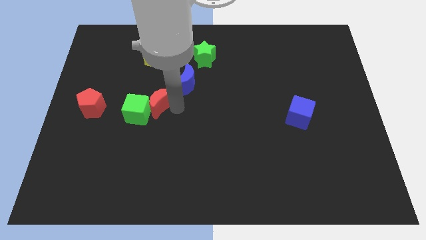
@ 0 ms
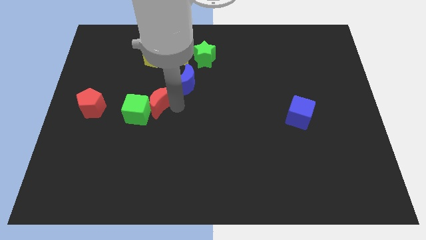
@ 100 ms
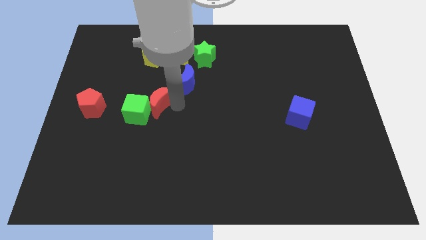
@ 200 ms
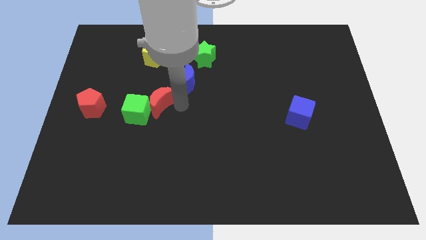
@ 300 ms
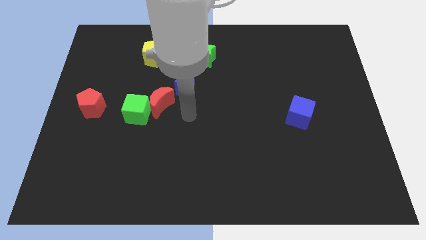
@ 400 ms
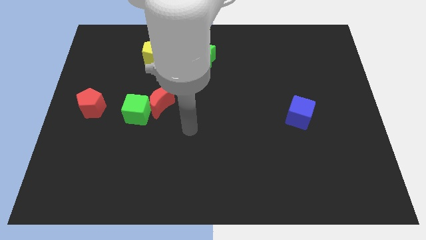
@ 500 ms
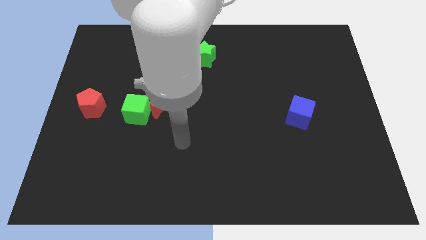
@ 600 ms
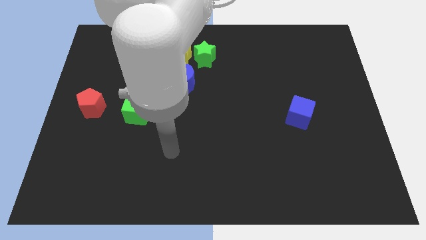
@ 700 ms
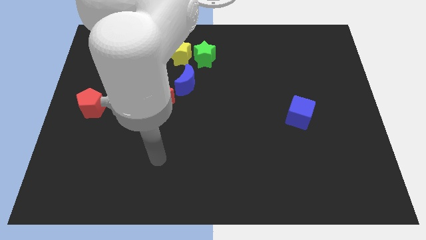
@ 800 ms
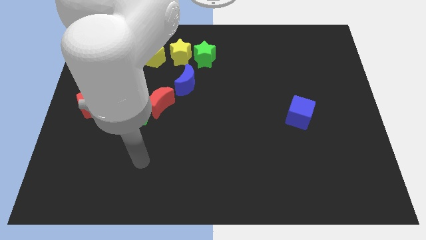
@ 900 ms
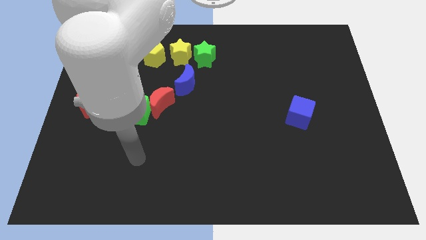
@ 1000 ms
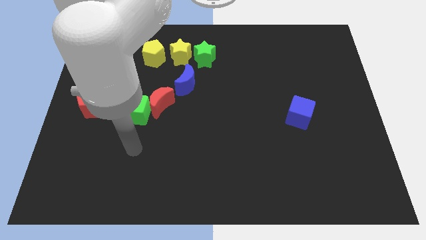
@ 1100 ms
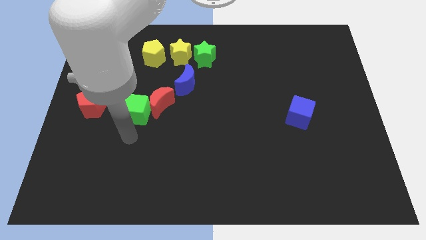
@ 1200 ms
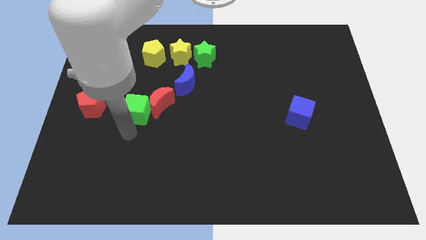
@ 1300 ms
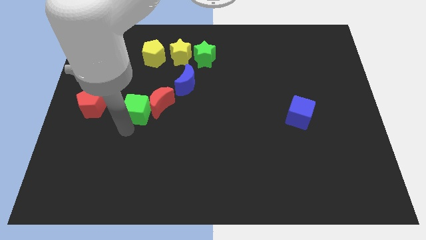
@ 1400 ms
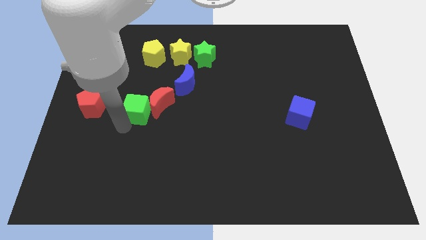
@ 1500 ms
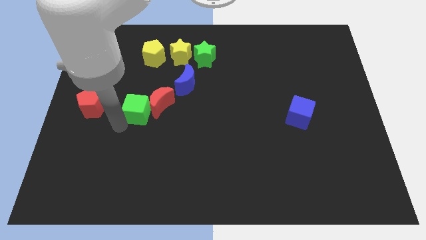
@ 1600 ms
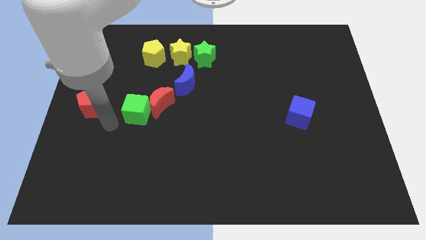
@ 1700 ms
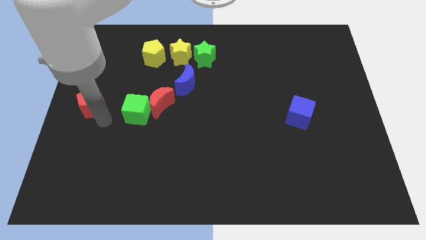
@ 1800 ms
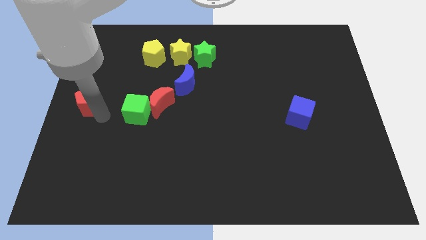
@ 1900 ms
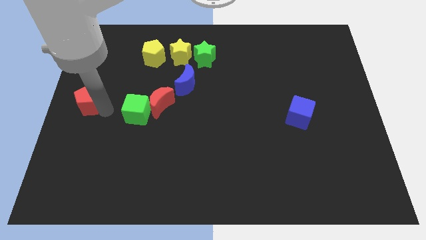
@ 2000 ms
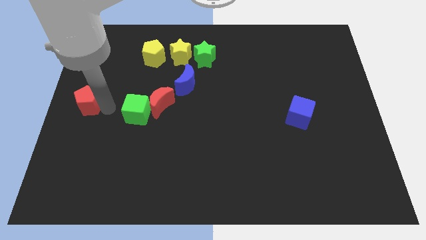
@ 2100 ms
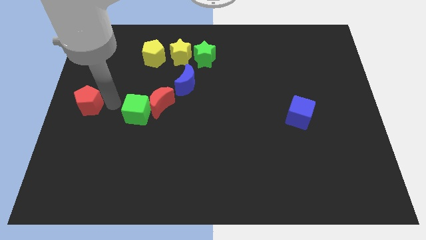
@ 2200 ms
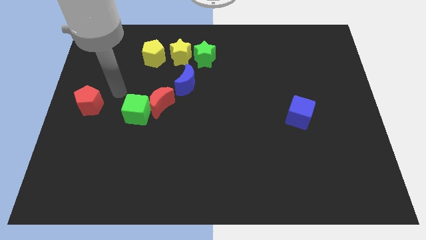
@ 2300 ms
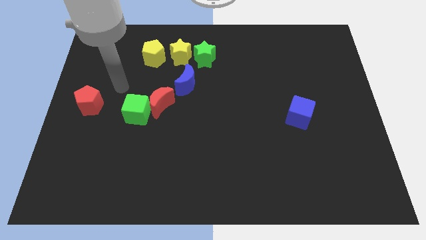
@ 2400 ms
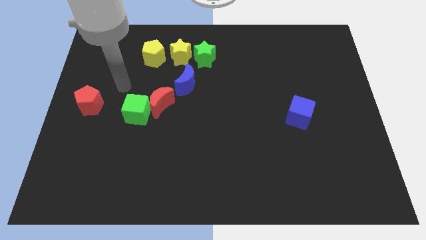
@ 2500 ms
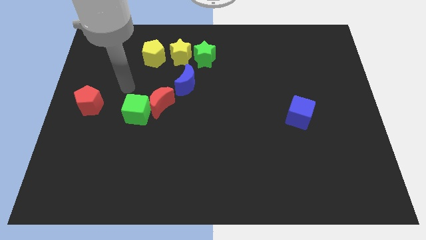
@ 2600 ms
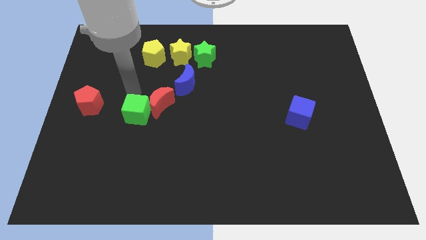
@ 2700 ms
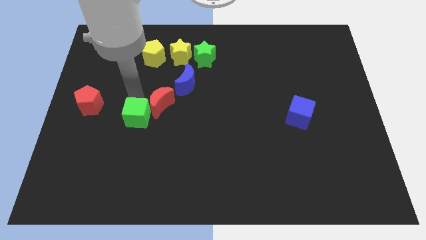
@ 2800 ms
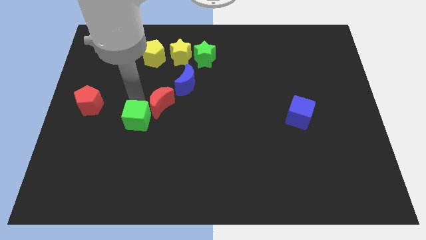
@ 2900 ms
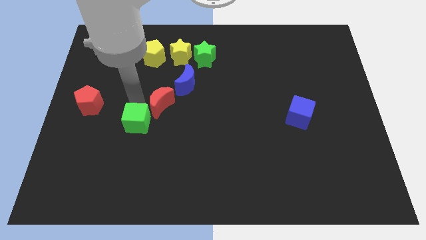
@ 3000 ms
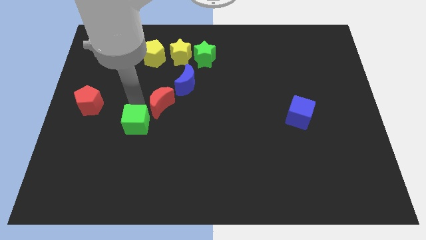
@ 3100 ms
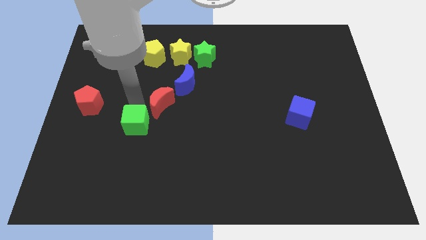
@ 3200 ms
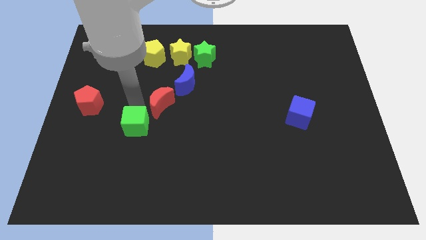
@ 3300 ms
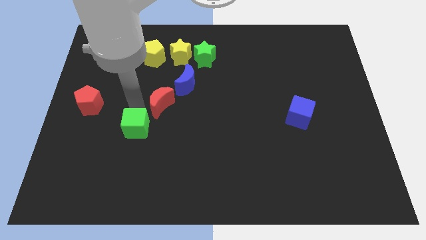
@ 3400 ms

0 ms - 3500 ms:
place your arm in between red pentagon and red moon

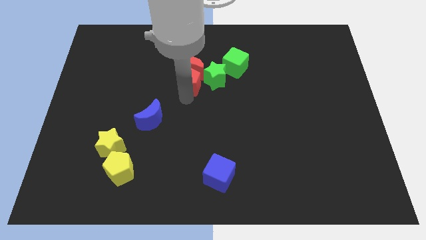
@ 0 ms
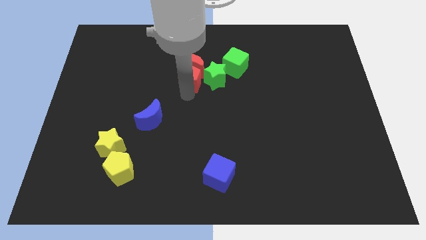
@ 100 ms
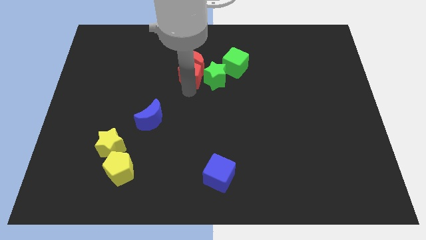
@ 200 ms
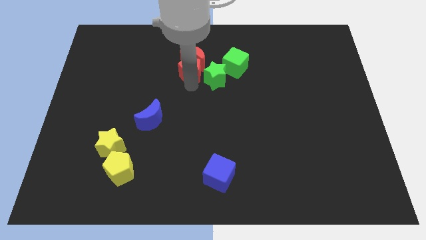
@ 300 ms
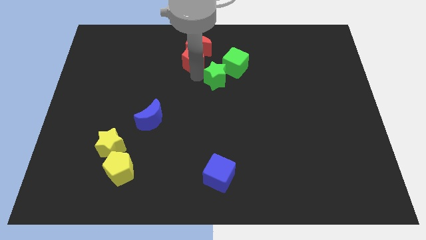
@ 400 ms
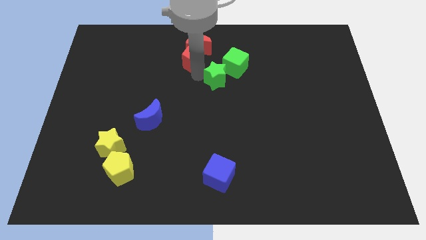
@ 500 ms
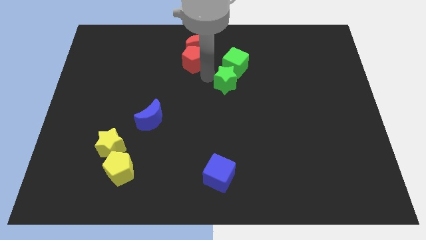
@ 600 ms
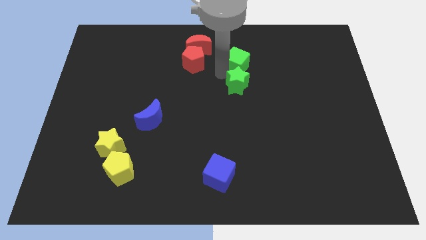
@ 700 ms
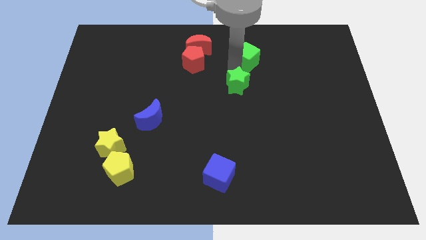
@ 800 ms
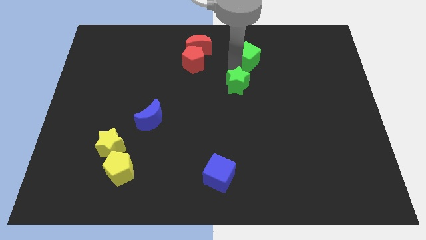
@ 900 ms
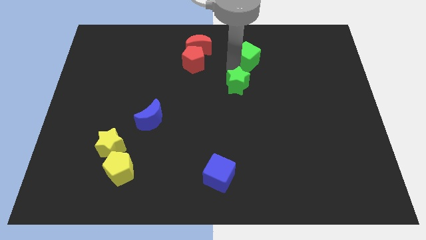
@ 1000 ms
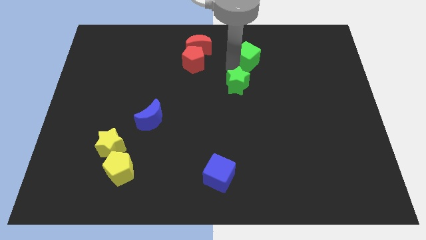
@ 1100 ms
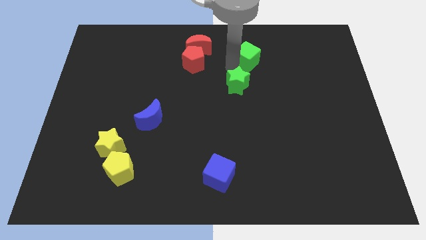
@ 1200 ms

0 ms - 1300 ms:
separate the red blocks and the green blocks

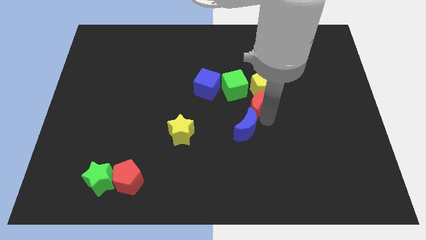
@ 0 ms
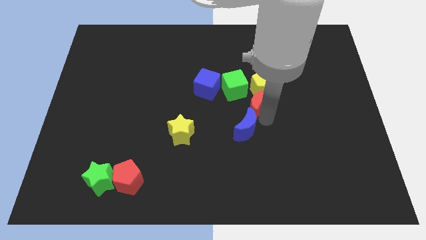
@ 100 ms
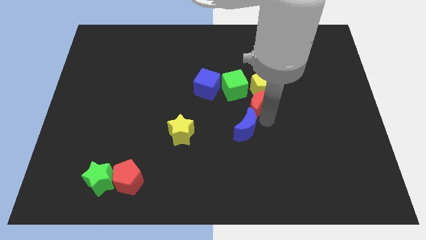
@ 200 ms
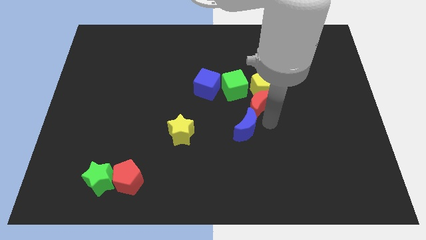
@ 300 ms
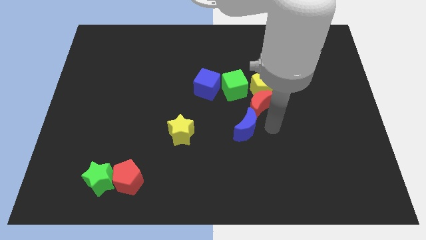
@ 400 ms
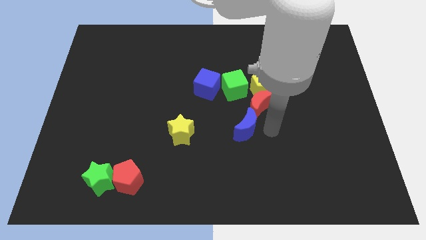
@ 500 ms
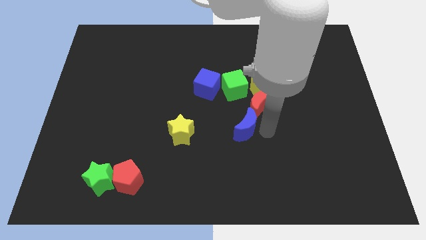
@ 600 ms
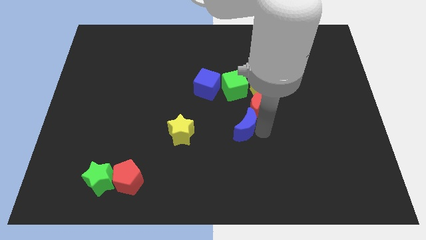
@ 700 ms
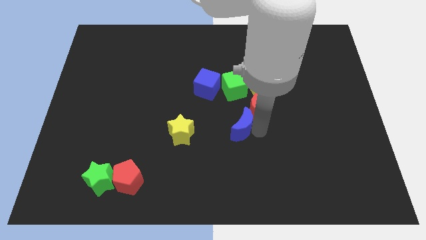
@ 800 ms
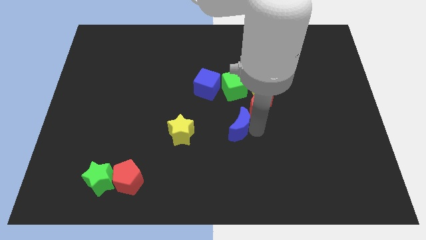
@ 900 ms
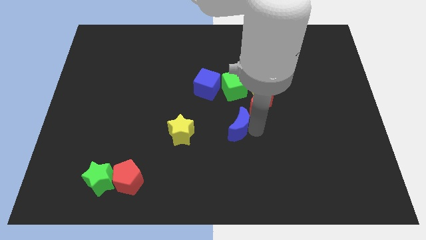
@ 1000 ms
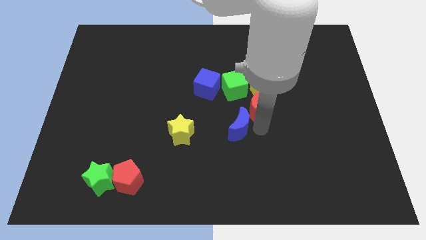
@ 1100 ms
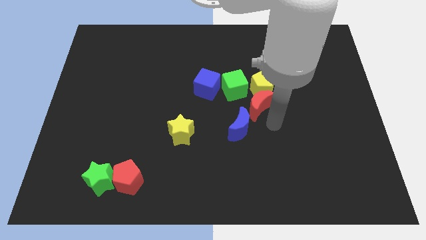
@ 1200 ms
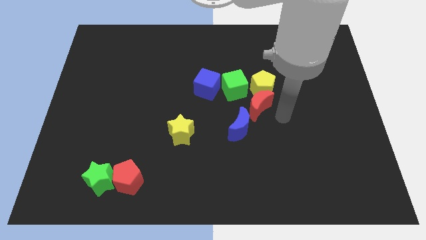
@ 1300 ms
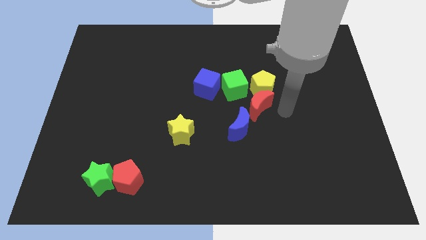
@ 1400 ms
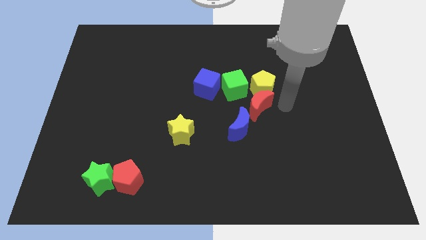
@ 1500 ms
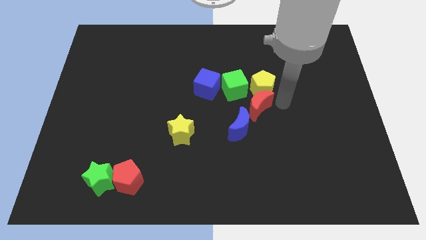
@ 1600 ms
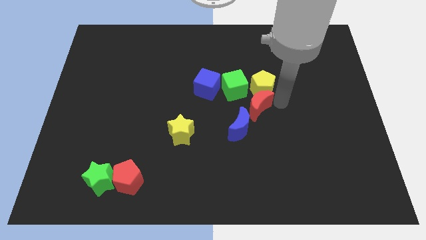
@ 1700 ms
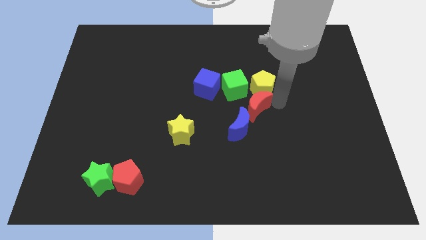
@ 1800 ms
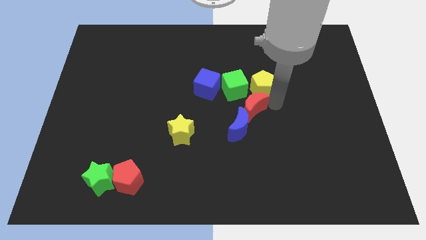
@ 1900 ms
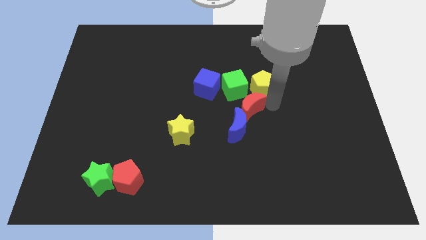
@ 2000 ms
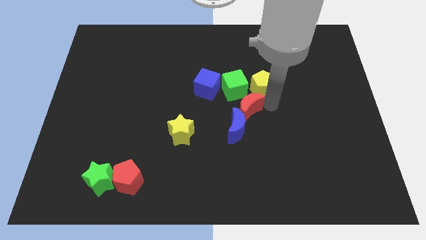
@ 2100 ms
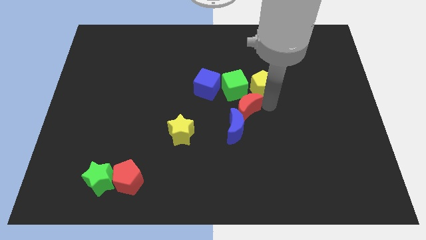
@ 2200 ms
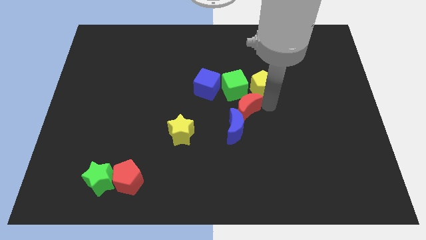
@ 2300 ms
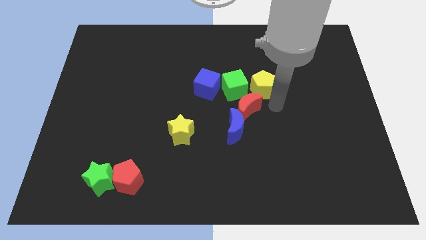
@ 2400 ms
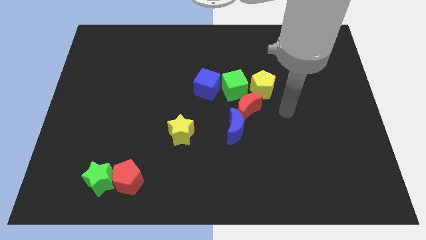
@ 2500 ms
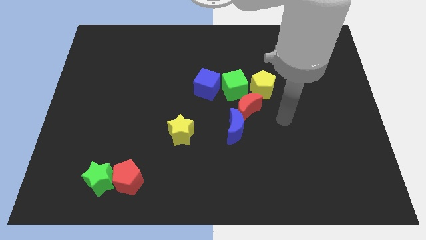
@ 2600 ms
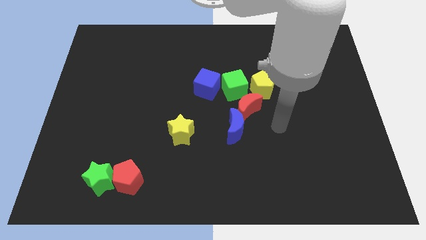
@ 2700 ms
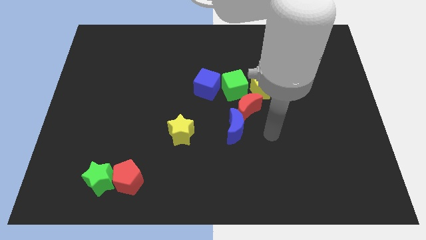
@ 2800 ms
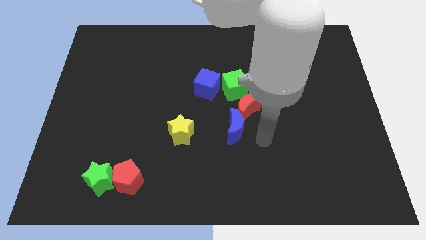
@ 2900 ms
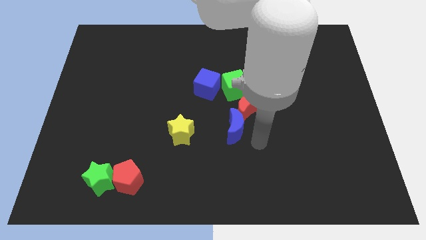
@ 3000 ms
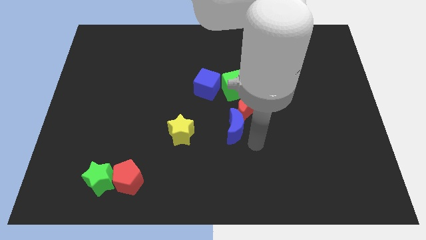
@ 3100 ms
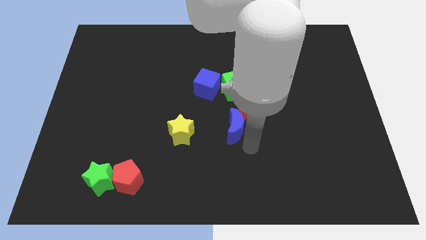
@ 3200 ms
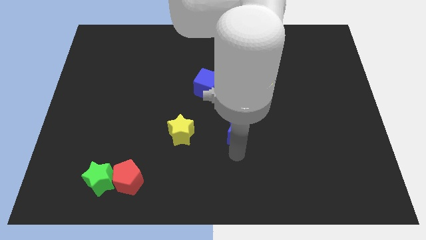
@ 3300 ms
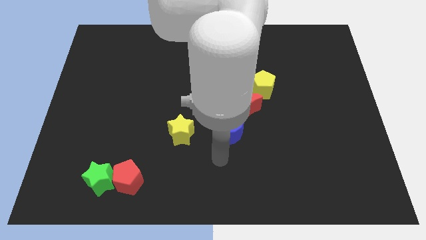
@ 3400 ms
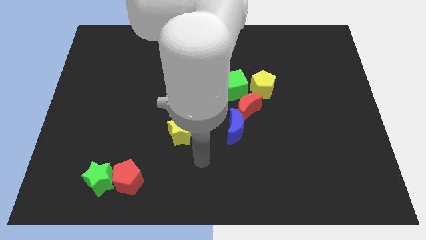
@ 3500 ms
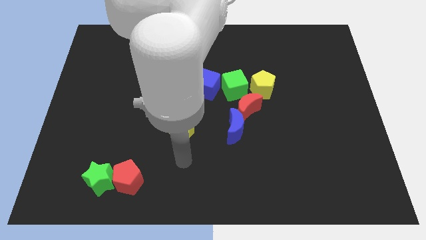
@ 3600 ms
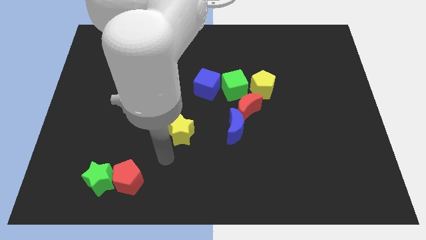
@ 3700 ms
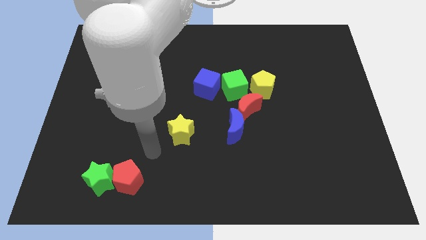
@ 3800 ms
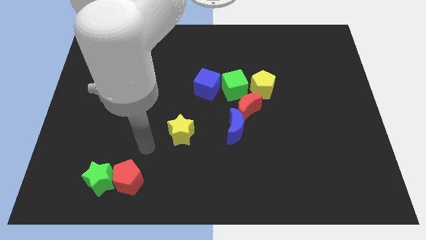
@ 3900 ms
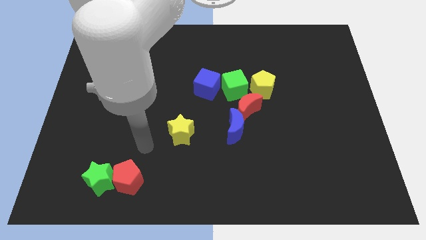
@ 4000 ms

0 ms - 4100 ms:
adjust the blue moon and the red moon slightly

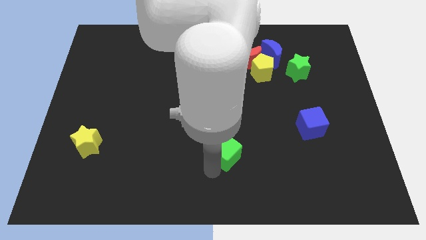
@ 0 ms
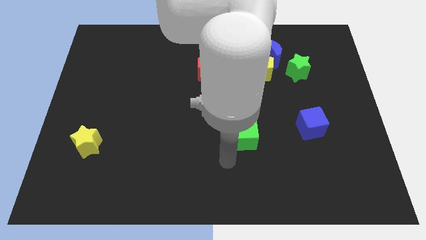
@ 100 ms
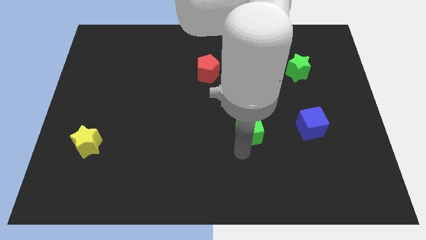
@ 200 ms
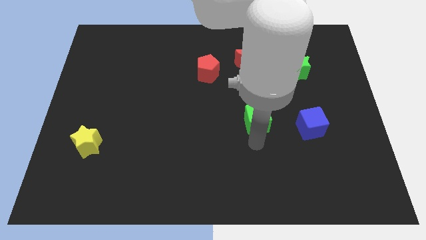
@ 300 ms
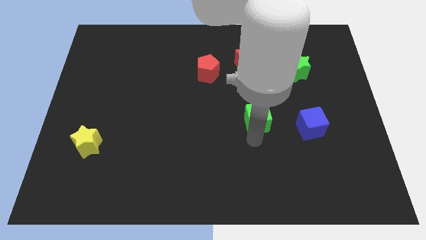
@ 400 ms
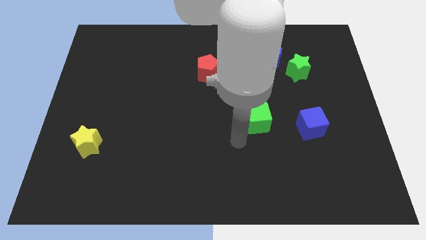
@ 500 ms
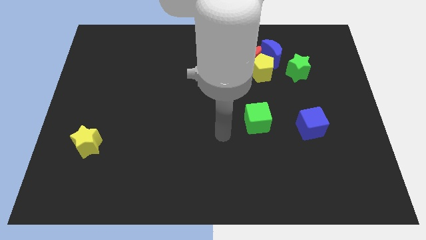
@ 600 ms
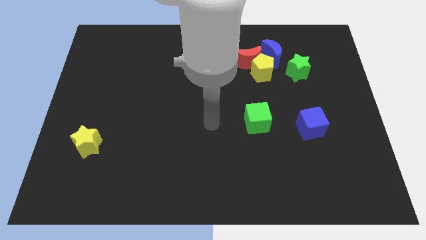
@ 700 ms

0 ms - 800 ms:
push the green cube to the left side of the blue cube
